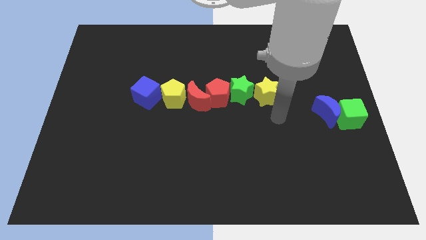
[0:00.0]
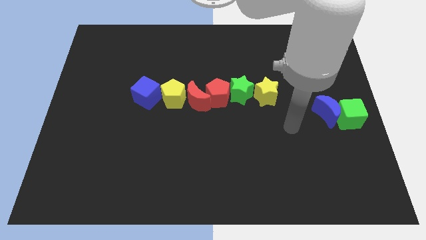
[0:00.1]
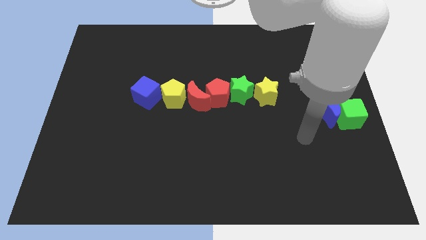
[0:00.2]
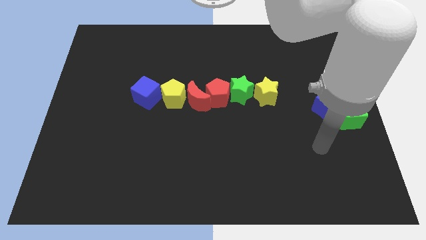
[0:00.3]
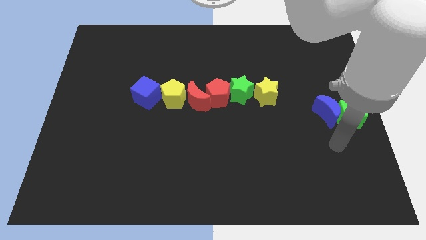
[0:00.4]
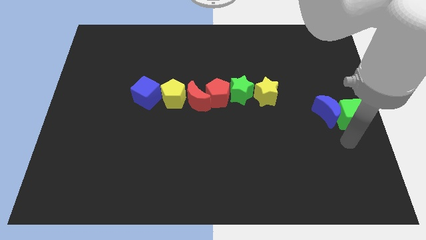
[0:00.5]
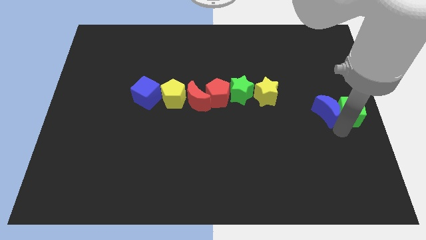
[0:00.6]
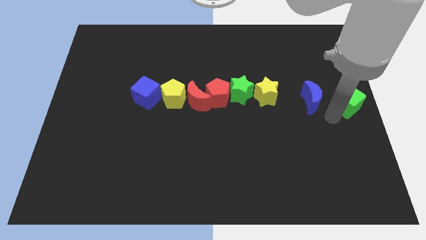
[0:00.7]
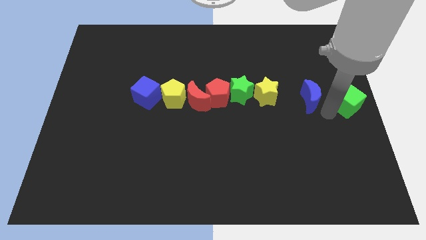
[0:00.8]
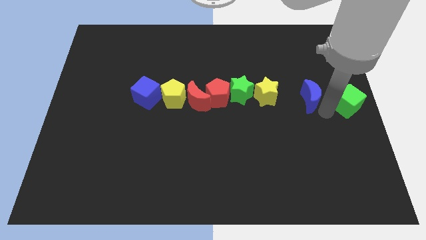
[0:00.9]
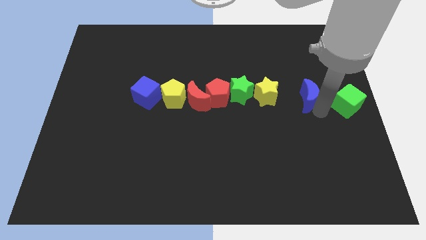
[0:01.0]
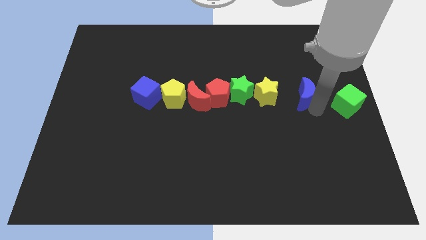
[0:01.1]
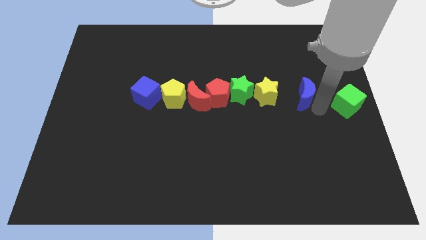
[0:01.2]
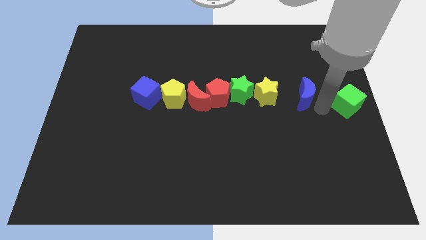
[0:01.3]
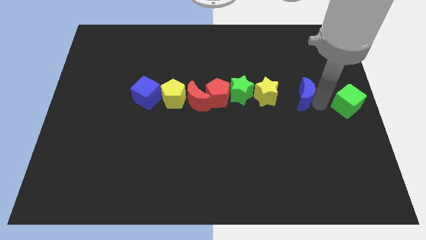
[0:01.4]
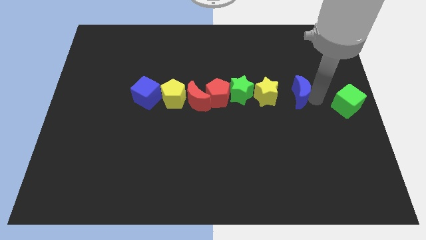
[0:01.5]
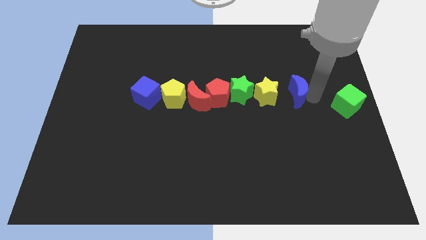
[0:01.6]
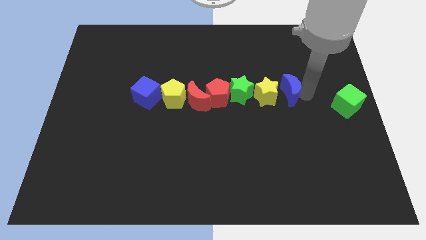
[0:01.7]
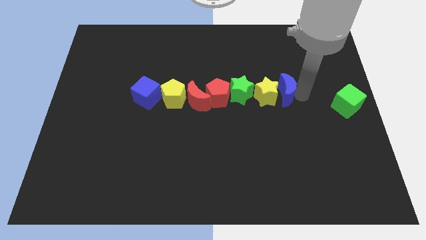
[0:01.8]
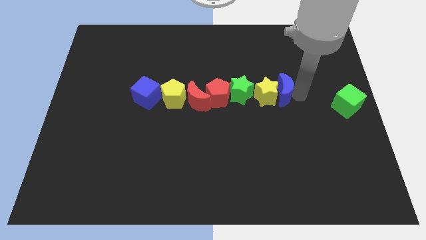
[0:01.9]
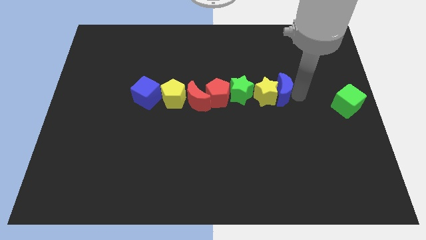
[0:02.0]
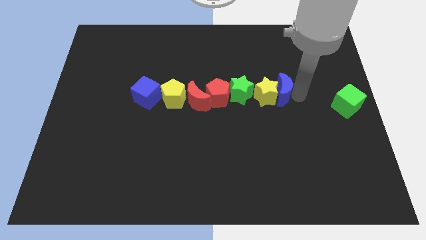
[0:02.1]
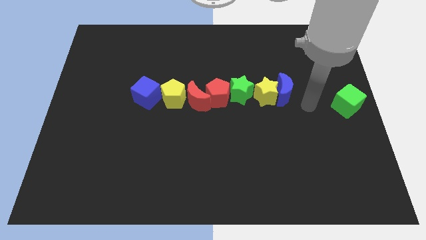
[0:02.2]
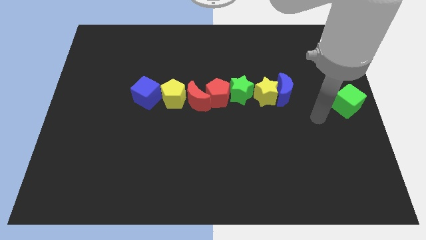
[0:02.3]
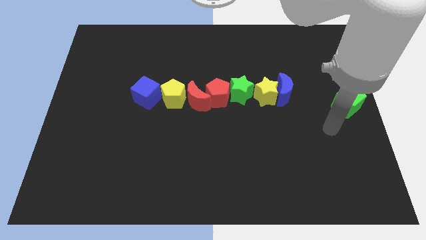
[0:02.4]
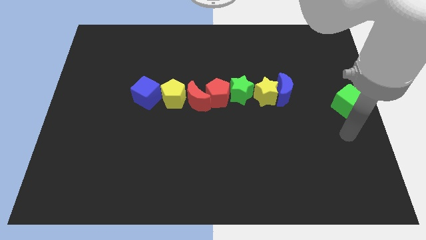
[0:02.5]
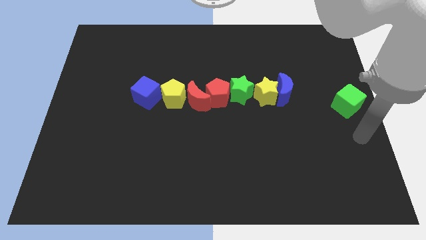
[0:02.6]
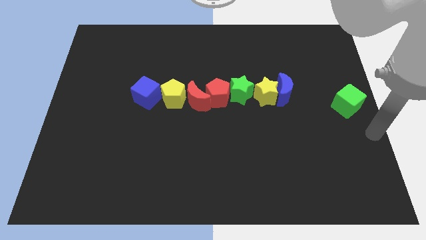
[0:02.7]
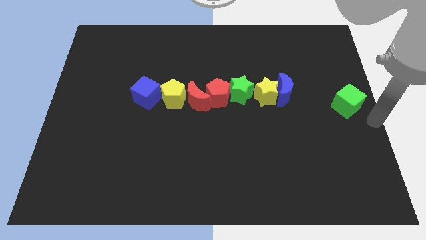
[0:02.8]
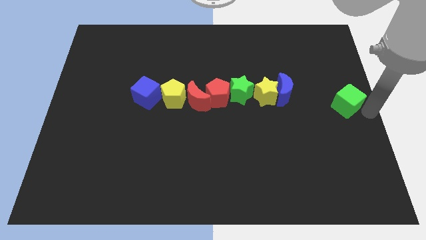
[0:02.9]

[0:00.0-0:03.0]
push the blue crescent to the right of the yellow star

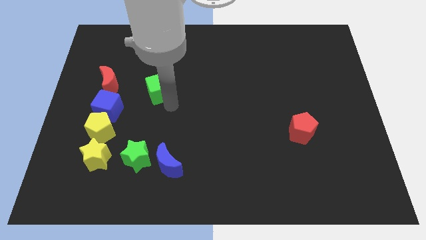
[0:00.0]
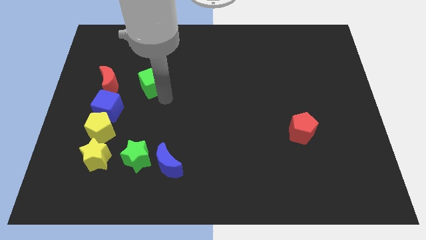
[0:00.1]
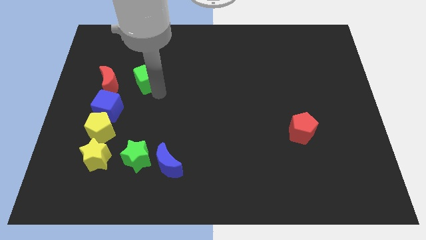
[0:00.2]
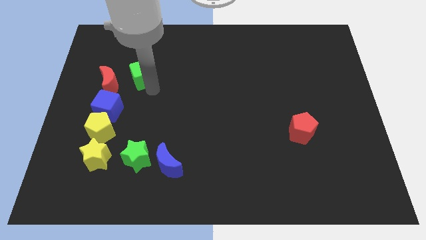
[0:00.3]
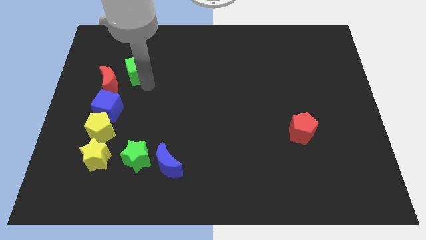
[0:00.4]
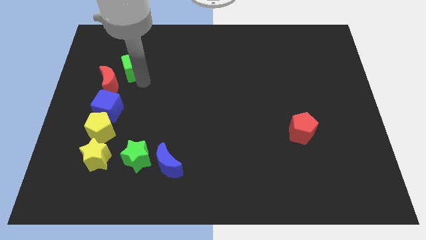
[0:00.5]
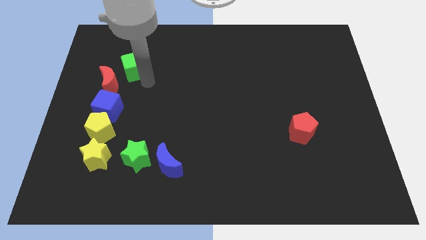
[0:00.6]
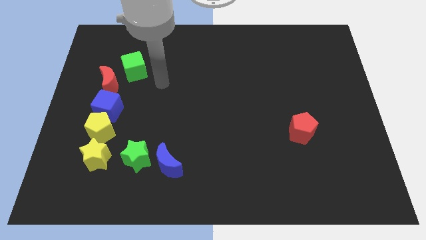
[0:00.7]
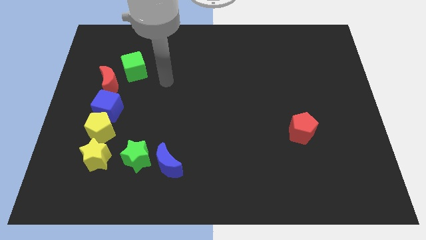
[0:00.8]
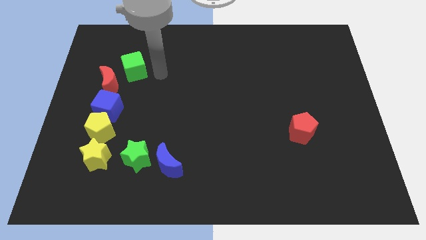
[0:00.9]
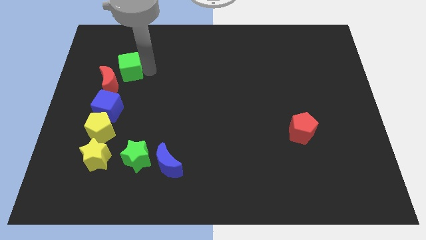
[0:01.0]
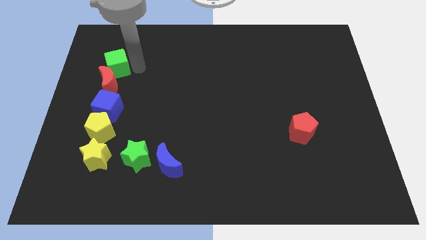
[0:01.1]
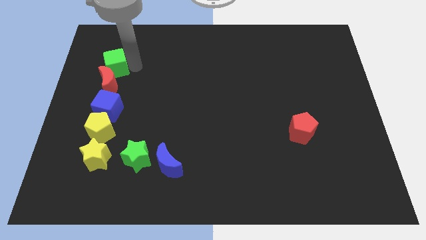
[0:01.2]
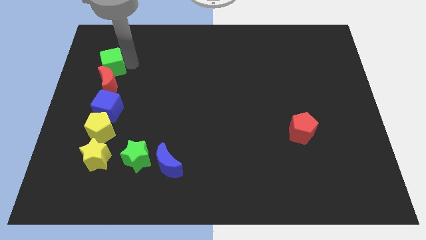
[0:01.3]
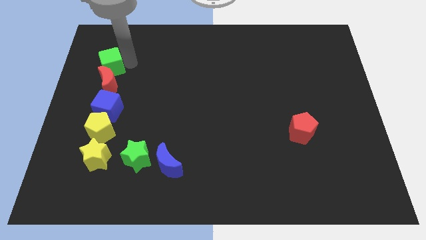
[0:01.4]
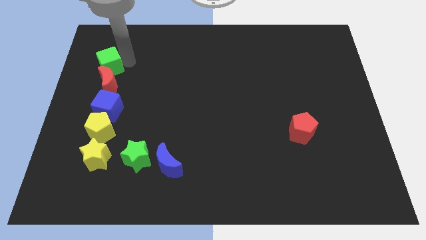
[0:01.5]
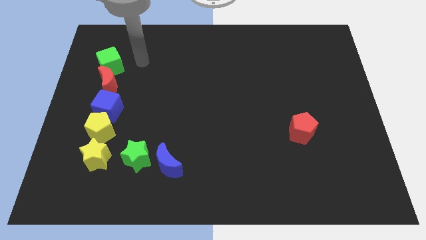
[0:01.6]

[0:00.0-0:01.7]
place green cube on the top of red crescent

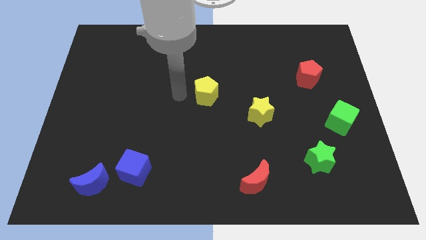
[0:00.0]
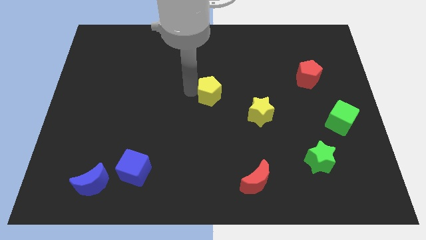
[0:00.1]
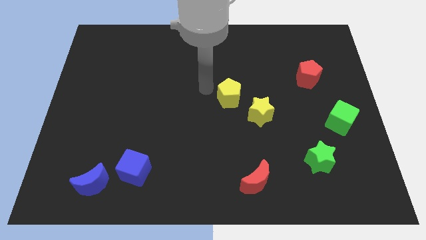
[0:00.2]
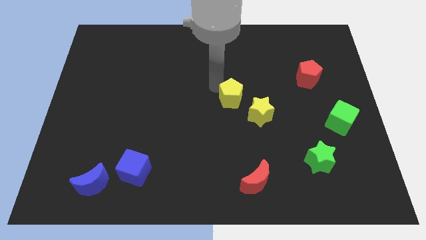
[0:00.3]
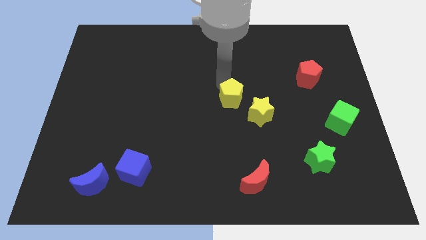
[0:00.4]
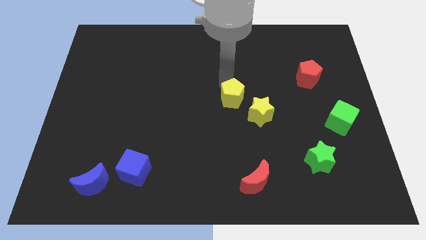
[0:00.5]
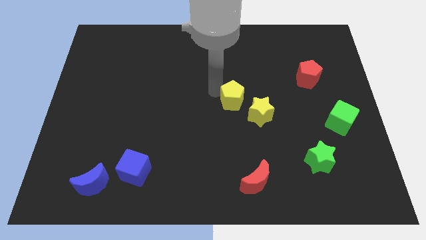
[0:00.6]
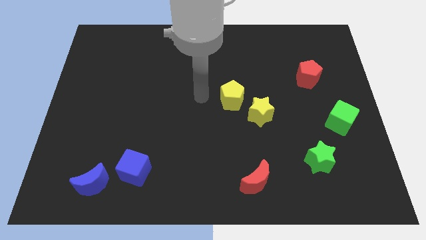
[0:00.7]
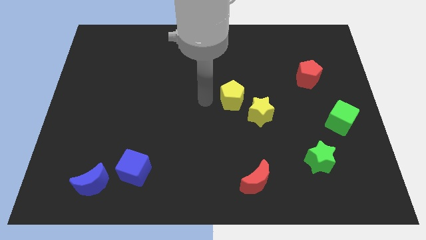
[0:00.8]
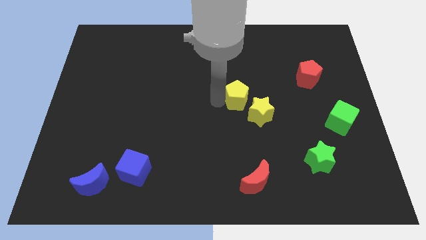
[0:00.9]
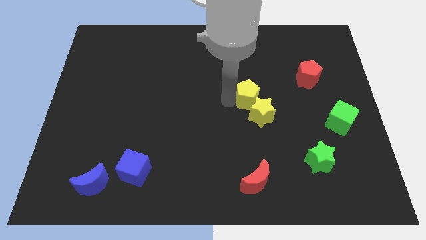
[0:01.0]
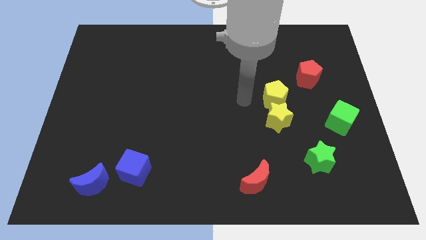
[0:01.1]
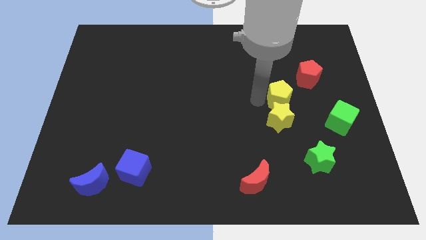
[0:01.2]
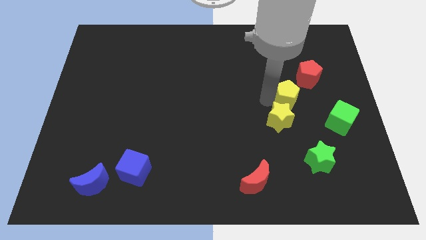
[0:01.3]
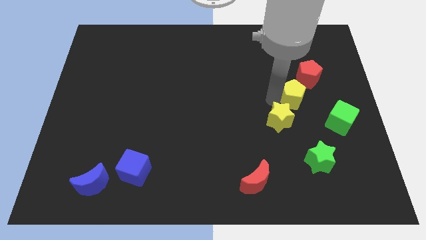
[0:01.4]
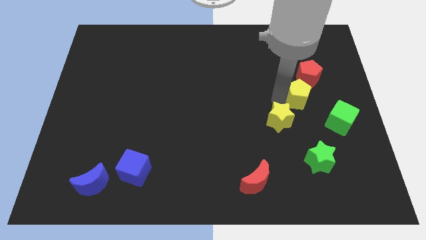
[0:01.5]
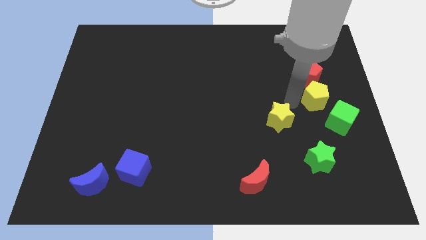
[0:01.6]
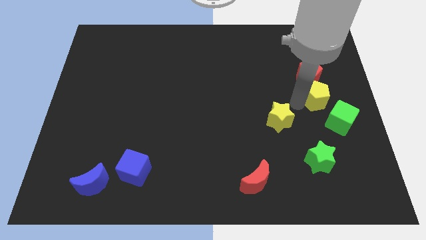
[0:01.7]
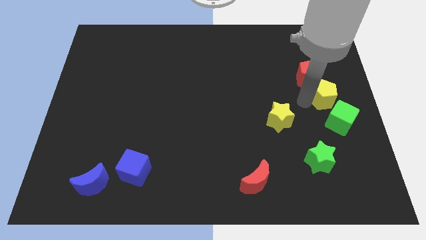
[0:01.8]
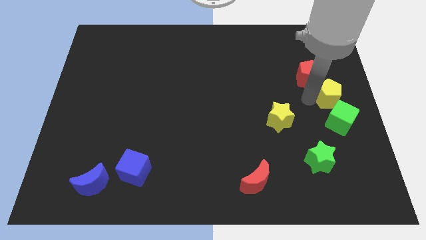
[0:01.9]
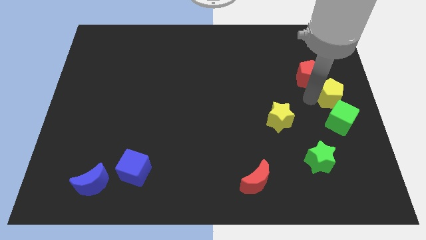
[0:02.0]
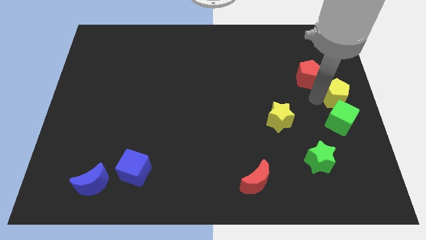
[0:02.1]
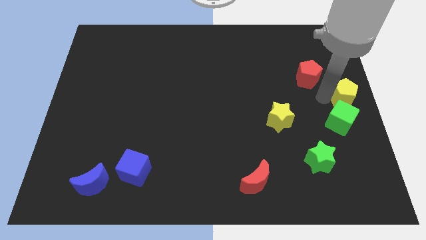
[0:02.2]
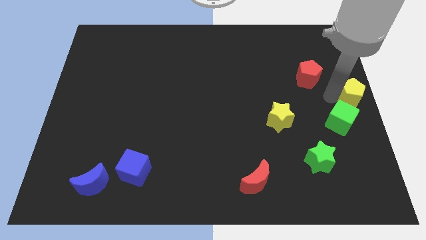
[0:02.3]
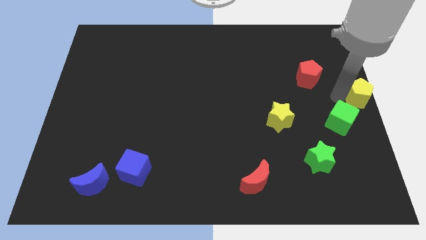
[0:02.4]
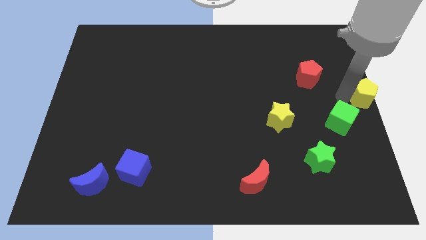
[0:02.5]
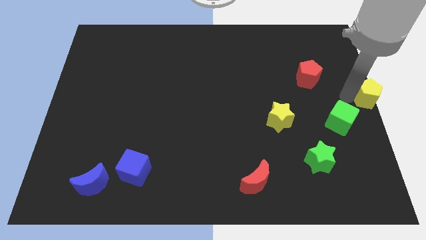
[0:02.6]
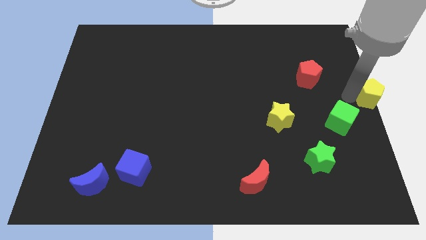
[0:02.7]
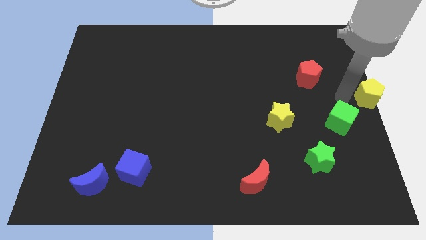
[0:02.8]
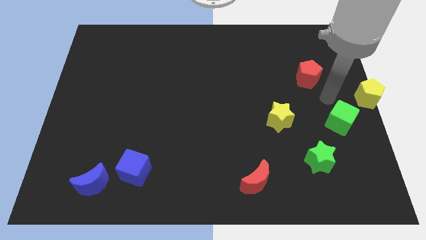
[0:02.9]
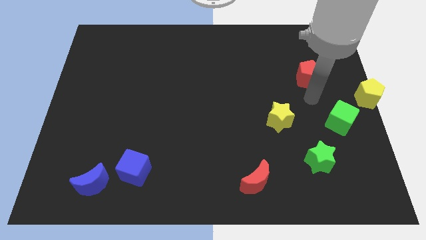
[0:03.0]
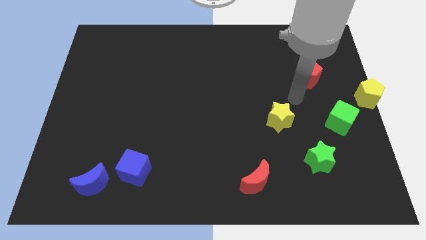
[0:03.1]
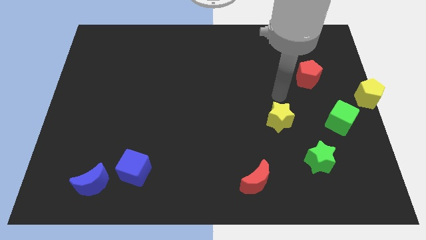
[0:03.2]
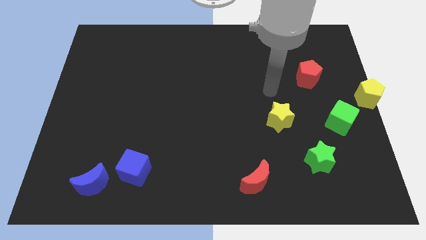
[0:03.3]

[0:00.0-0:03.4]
move yellow pentagon to the right center

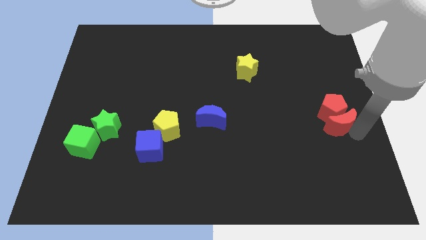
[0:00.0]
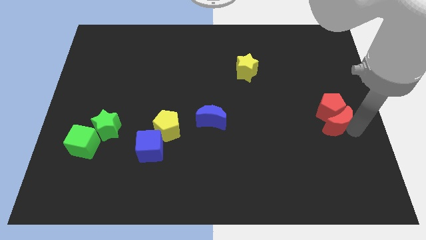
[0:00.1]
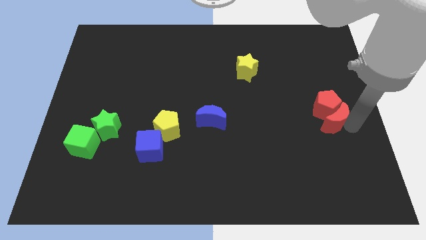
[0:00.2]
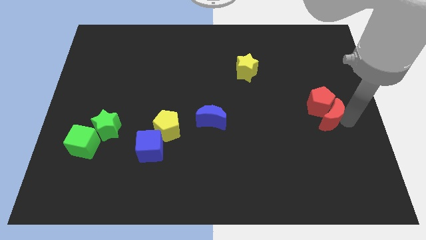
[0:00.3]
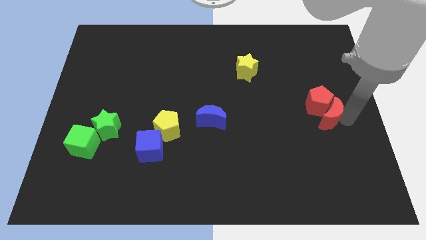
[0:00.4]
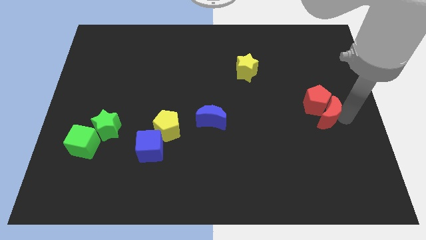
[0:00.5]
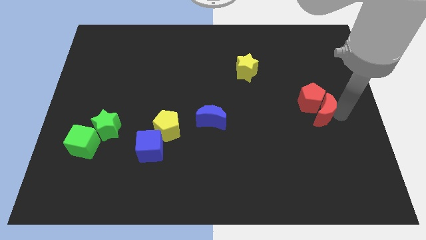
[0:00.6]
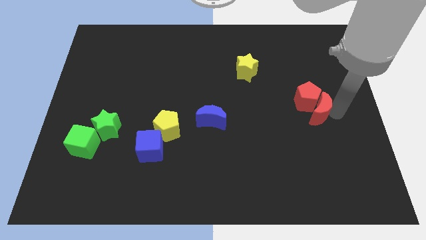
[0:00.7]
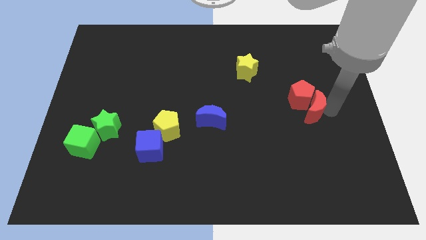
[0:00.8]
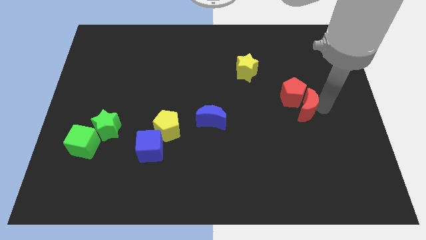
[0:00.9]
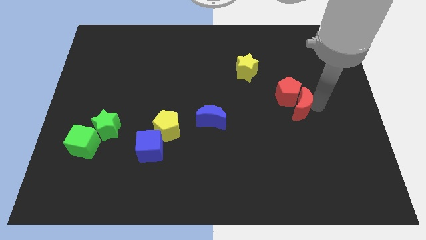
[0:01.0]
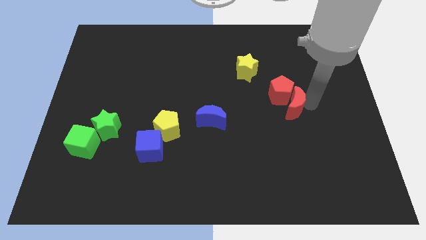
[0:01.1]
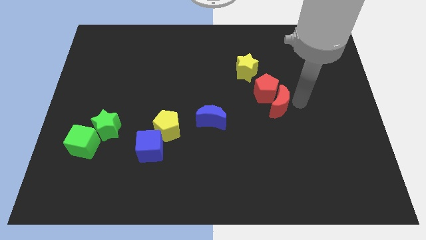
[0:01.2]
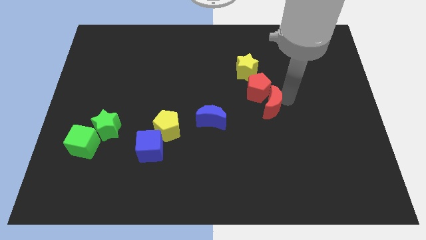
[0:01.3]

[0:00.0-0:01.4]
push the red crescent along with red pentagon to the slightly top left to the board
